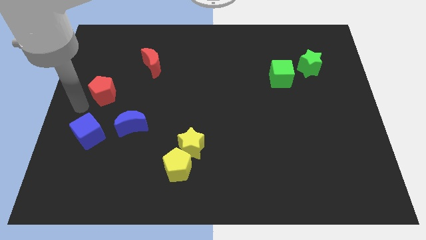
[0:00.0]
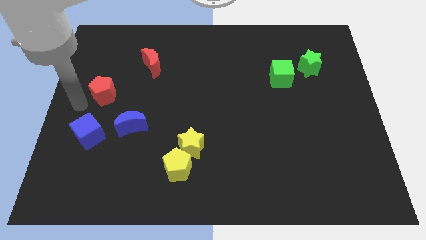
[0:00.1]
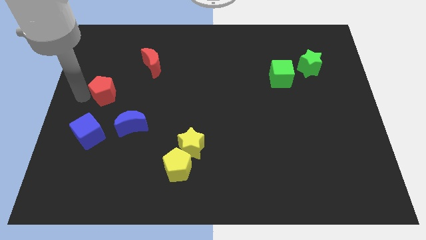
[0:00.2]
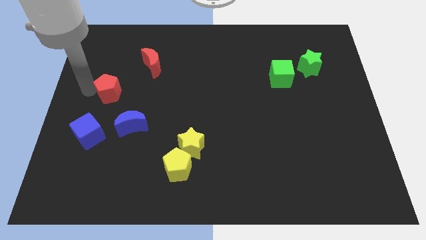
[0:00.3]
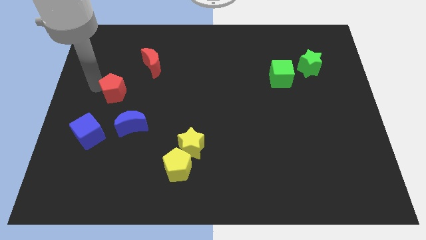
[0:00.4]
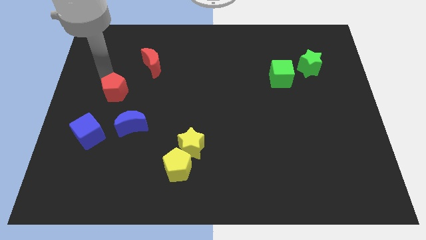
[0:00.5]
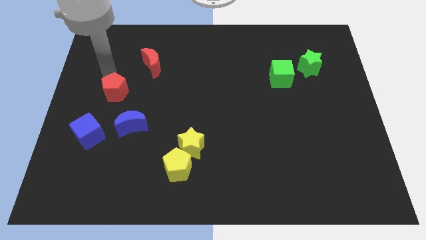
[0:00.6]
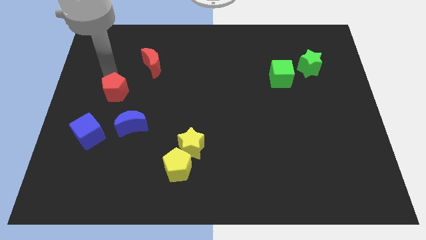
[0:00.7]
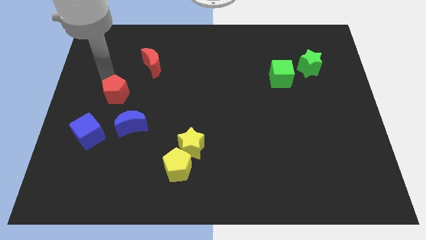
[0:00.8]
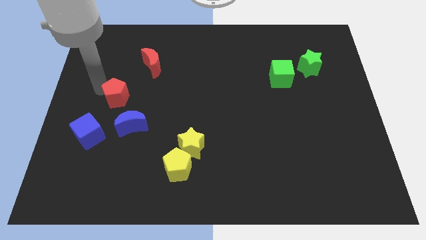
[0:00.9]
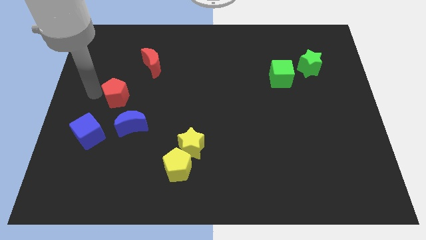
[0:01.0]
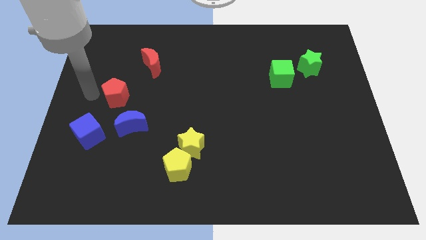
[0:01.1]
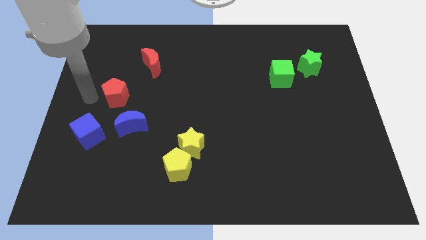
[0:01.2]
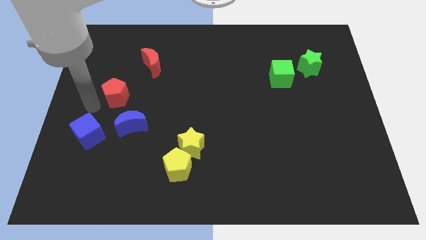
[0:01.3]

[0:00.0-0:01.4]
push red pentagon towards red crescent

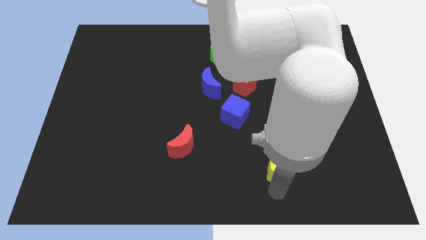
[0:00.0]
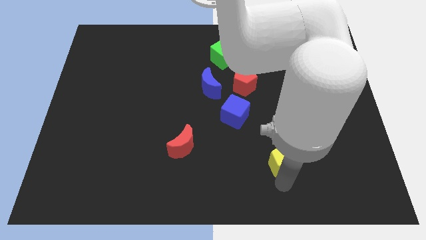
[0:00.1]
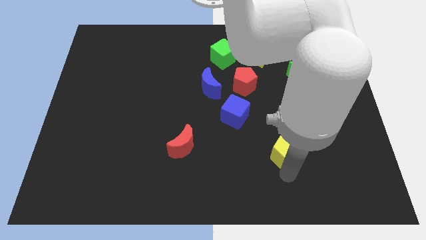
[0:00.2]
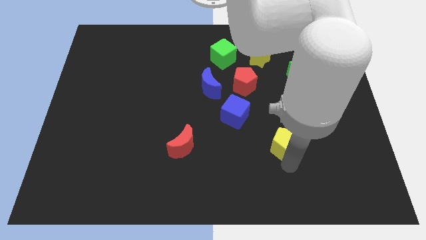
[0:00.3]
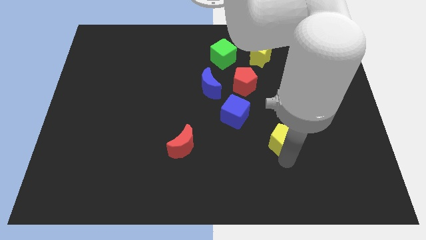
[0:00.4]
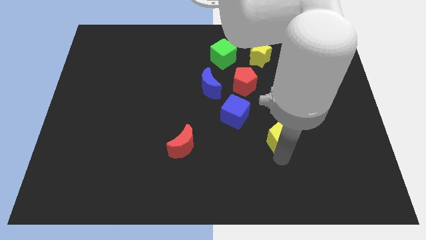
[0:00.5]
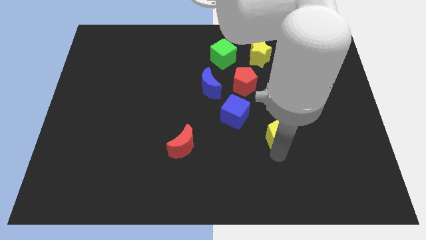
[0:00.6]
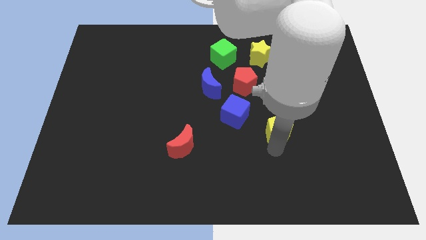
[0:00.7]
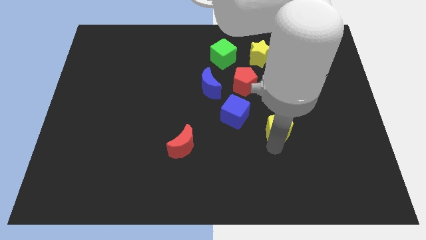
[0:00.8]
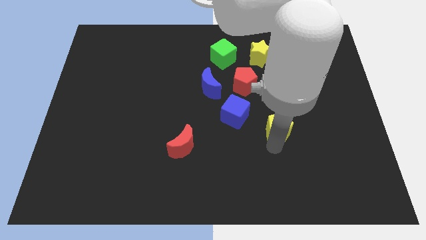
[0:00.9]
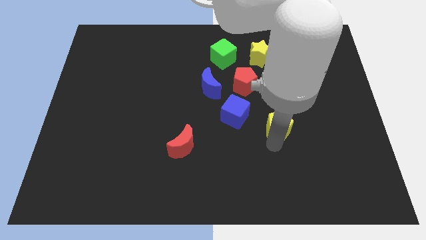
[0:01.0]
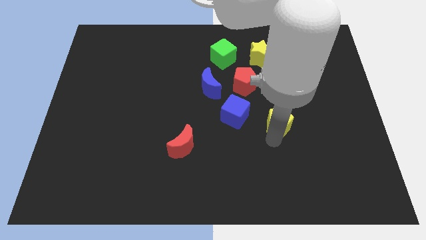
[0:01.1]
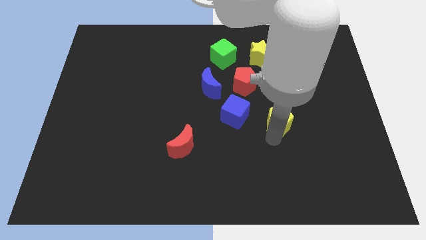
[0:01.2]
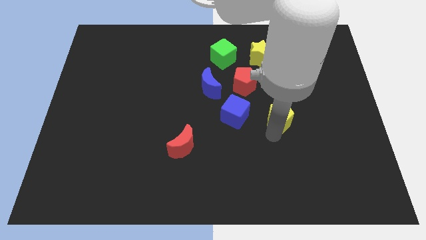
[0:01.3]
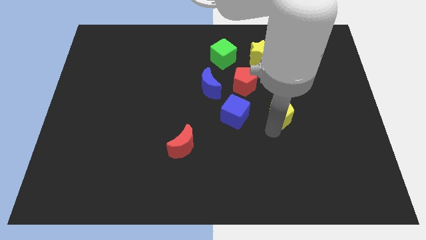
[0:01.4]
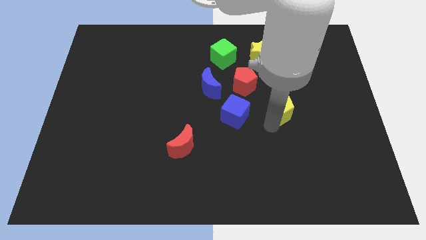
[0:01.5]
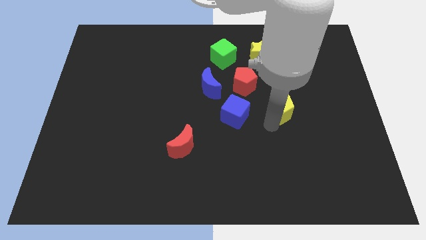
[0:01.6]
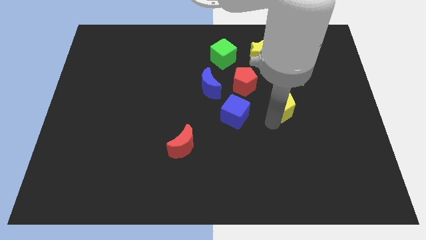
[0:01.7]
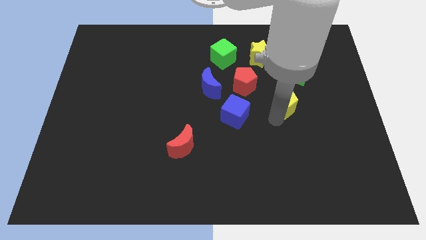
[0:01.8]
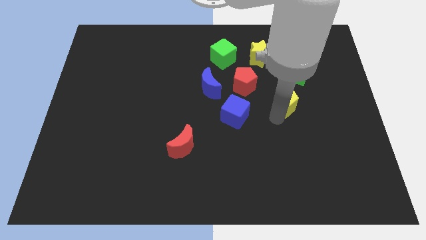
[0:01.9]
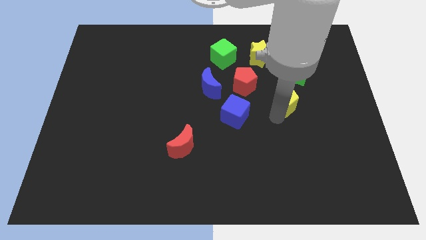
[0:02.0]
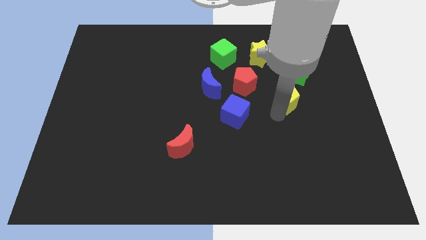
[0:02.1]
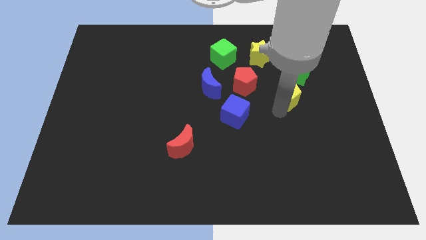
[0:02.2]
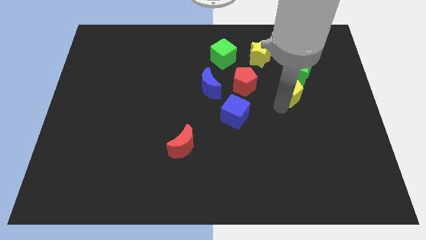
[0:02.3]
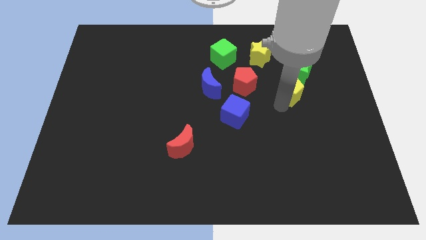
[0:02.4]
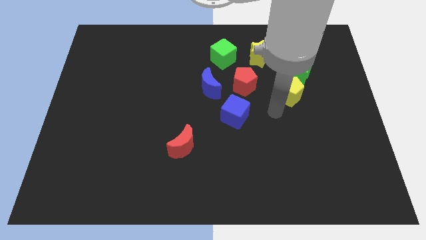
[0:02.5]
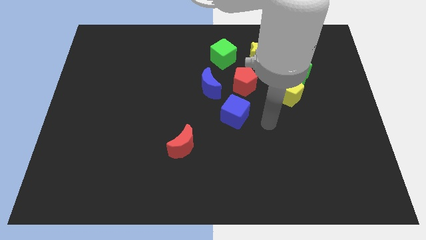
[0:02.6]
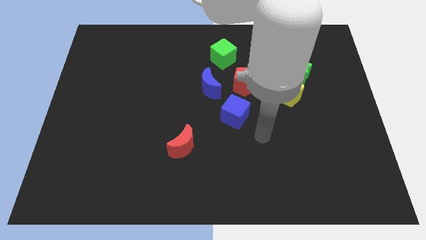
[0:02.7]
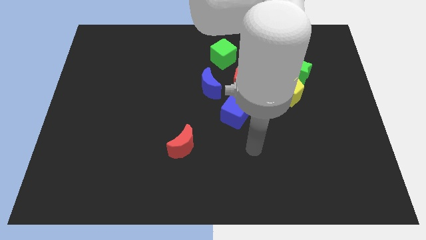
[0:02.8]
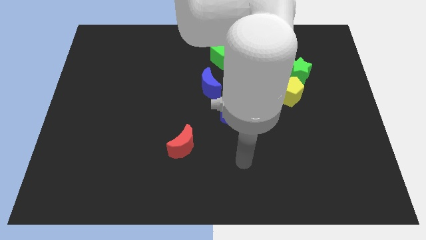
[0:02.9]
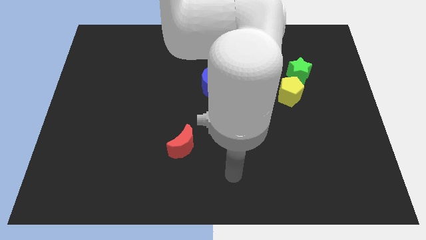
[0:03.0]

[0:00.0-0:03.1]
drag the yellow pentagon into green star

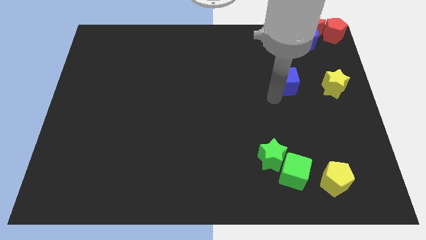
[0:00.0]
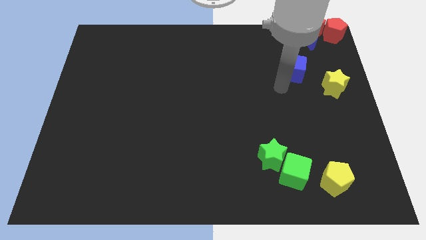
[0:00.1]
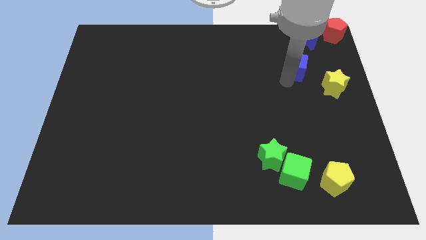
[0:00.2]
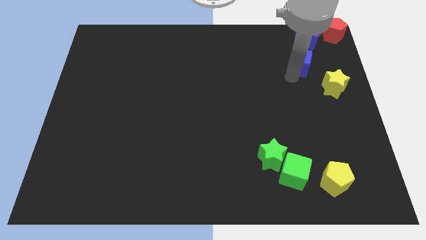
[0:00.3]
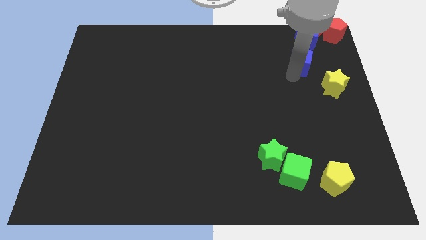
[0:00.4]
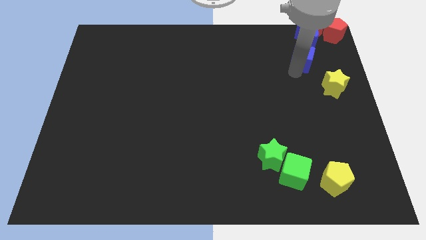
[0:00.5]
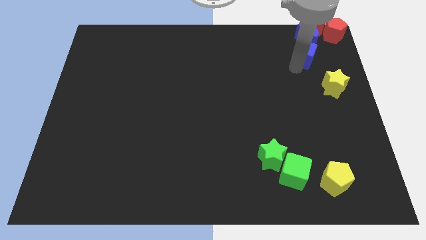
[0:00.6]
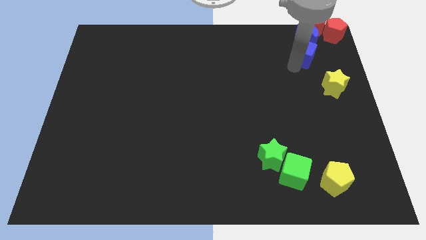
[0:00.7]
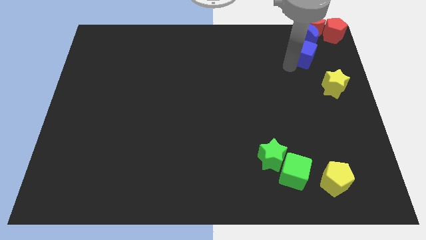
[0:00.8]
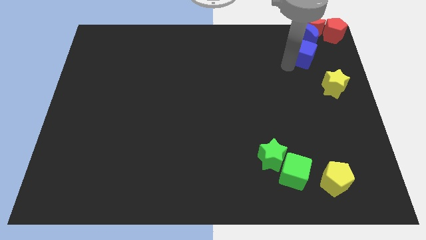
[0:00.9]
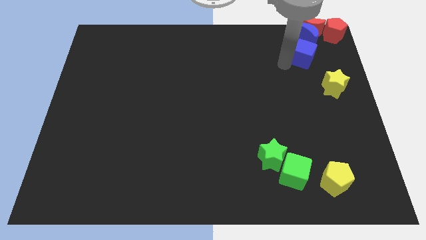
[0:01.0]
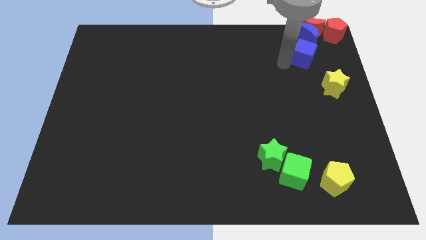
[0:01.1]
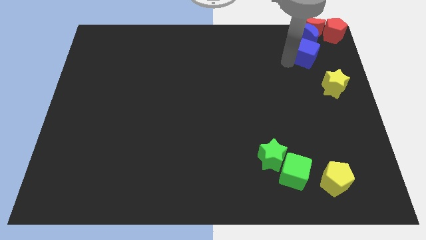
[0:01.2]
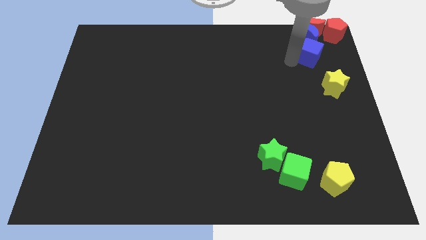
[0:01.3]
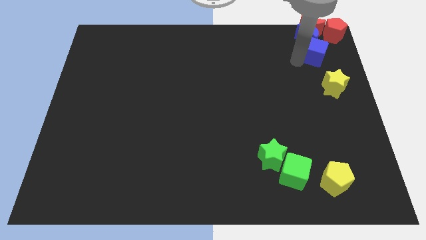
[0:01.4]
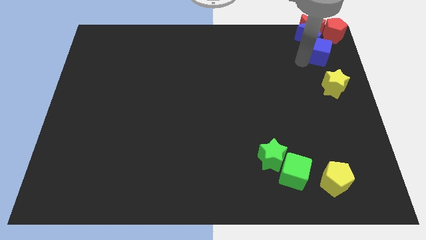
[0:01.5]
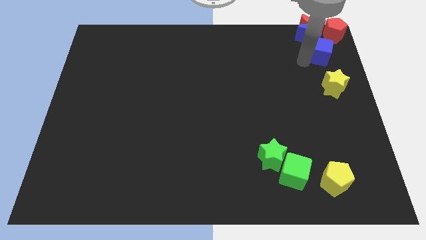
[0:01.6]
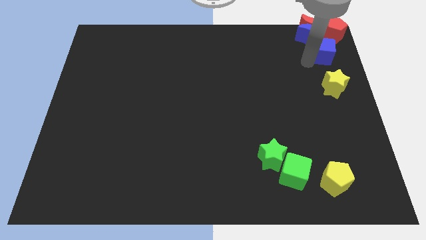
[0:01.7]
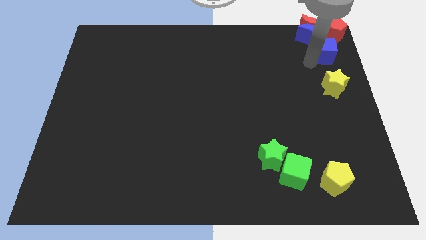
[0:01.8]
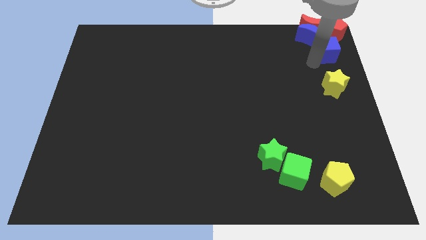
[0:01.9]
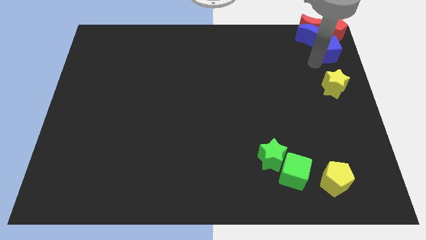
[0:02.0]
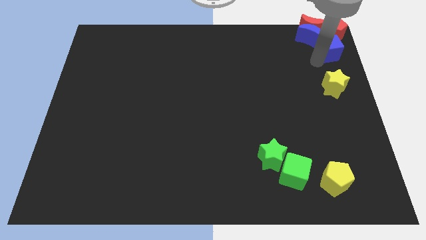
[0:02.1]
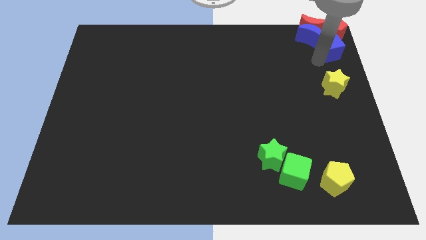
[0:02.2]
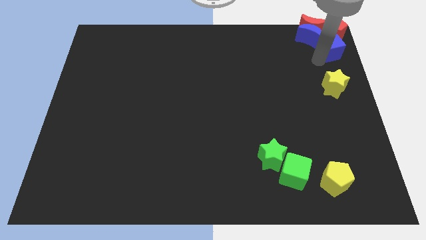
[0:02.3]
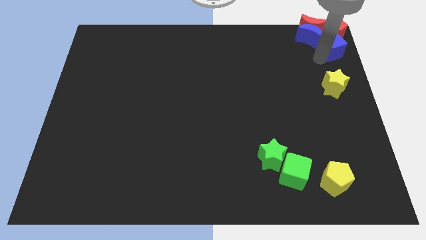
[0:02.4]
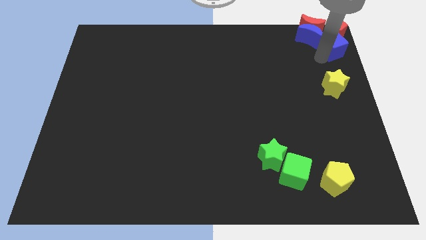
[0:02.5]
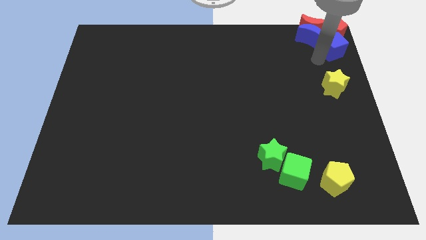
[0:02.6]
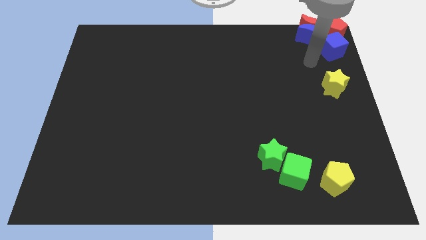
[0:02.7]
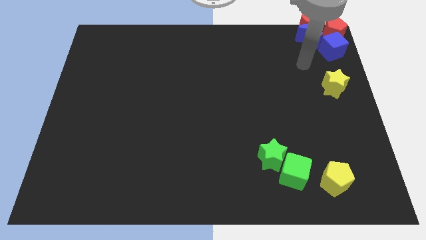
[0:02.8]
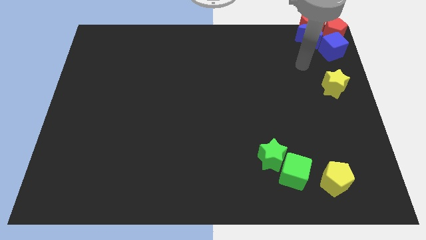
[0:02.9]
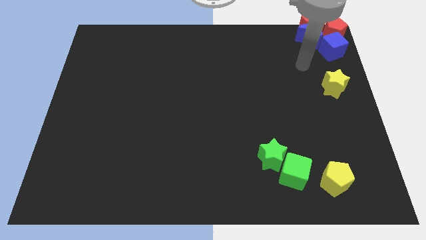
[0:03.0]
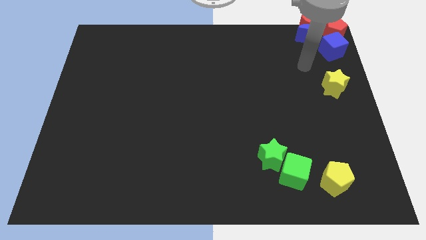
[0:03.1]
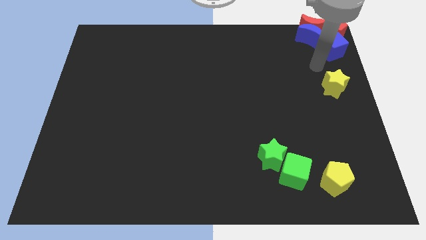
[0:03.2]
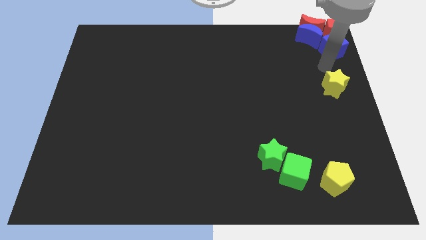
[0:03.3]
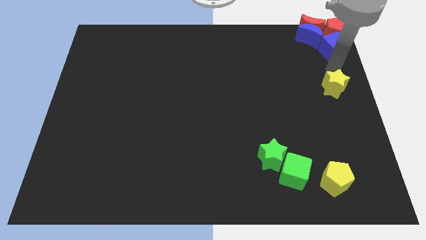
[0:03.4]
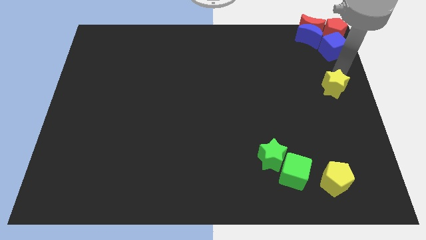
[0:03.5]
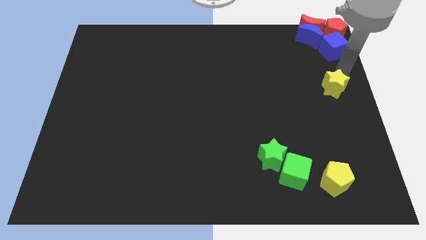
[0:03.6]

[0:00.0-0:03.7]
place the blue cube at the bottom of the red pentagon

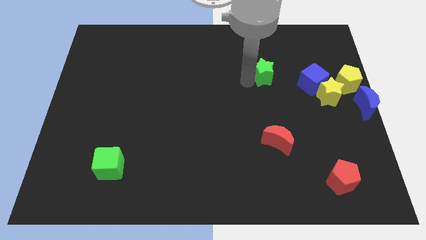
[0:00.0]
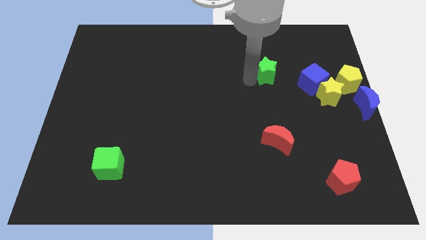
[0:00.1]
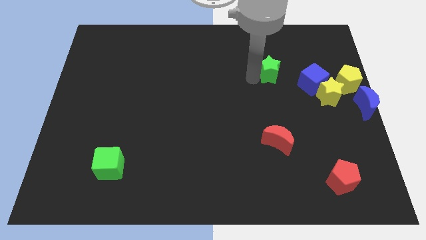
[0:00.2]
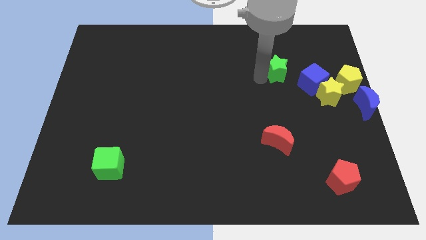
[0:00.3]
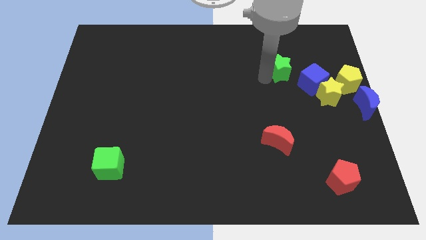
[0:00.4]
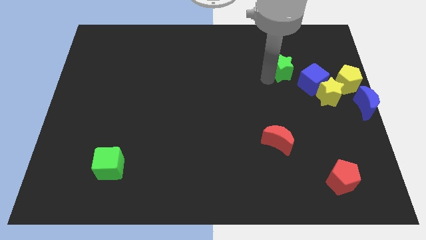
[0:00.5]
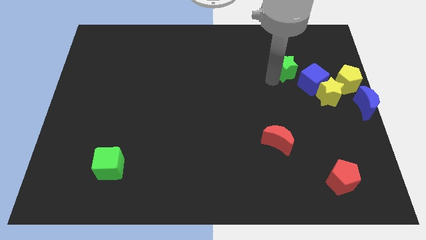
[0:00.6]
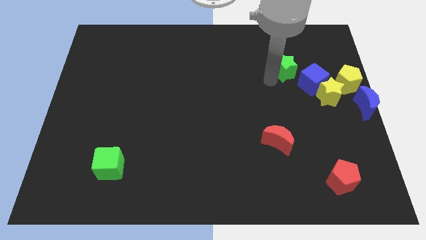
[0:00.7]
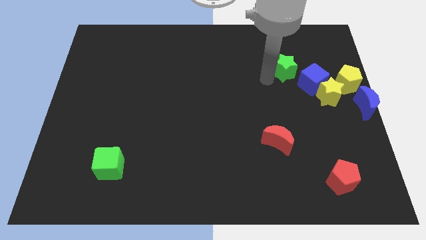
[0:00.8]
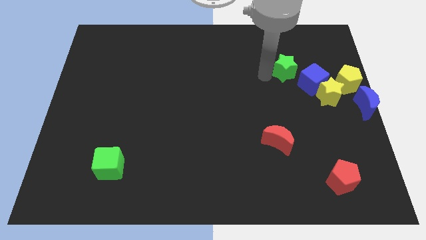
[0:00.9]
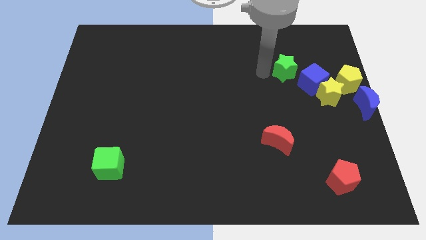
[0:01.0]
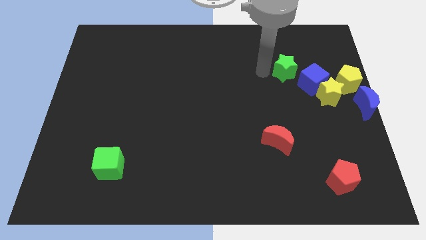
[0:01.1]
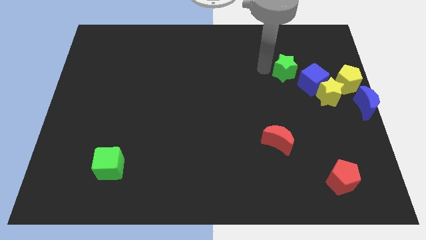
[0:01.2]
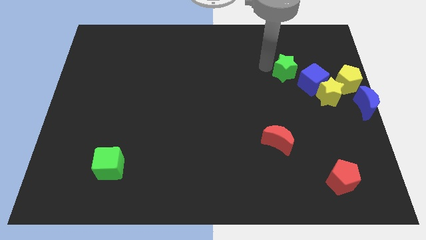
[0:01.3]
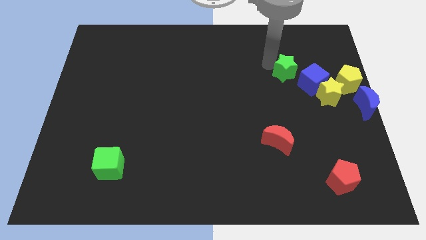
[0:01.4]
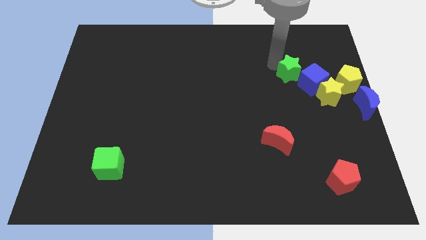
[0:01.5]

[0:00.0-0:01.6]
push the green star into the blue cube
